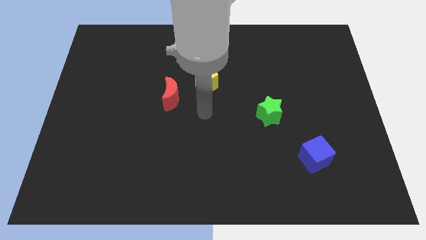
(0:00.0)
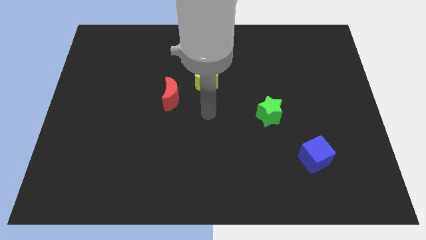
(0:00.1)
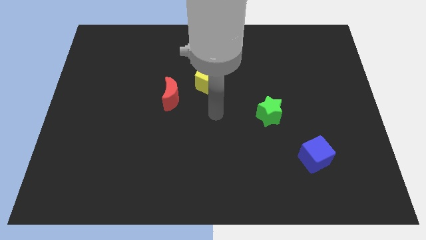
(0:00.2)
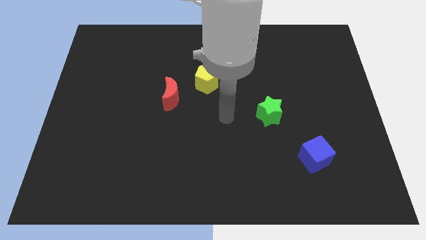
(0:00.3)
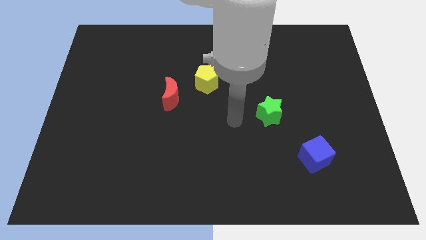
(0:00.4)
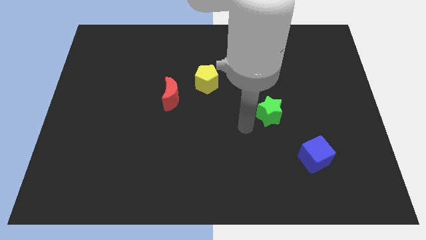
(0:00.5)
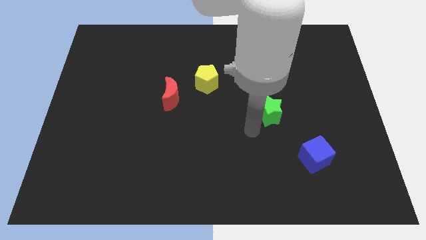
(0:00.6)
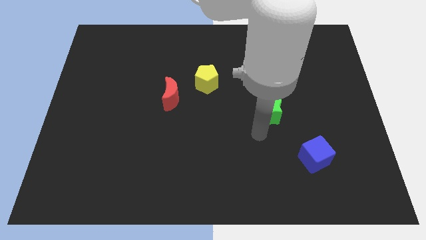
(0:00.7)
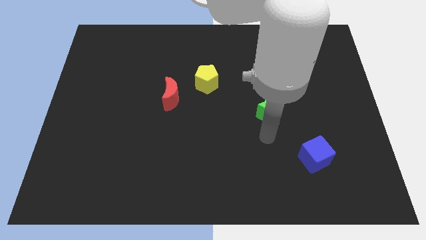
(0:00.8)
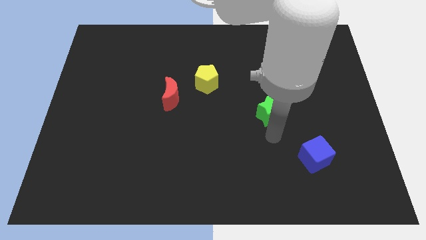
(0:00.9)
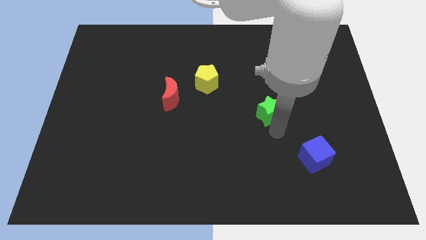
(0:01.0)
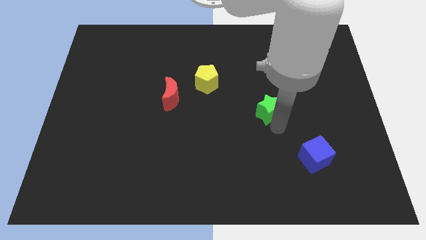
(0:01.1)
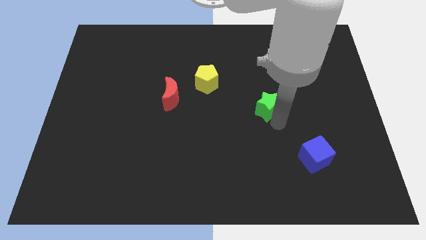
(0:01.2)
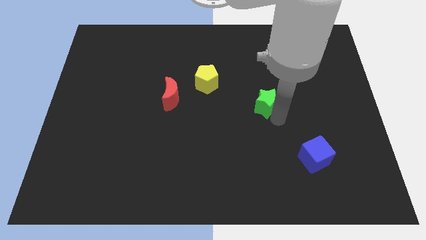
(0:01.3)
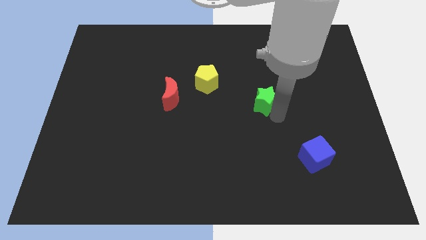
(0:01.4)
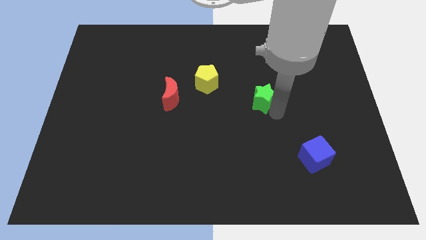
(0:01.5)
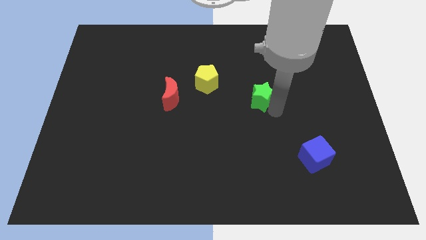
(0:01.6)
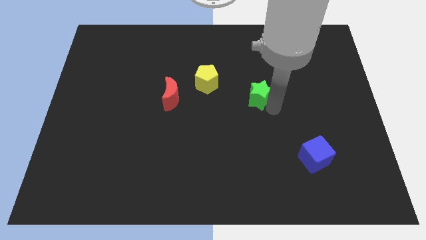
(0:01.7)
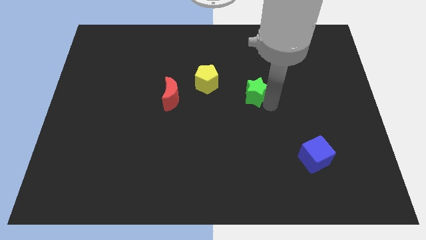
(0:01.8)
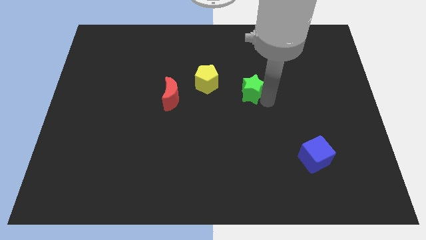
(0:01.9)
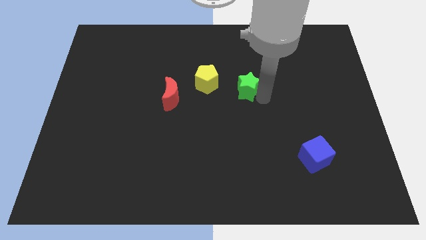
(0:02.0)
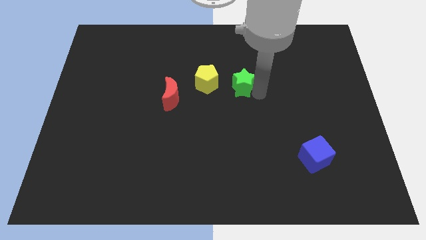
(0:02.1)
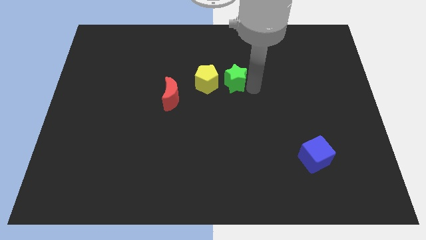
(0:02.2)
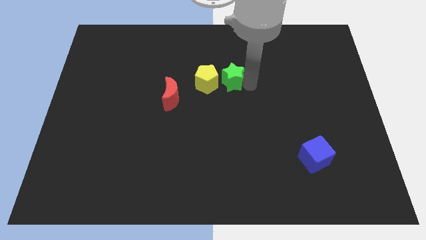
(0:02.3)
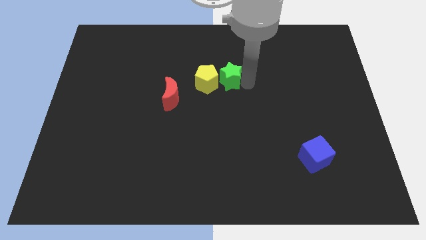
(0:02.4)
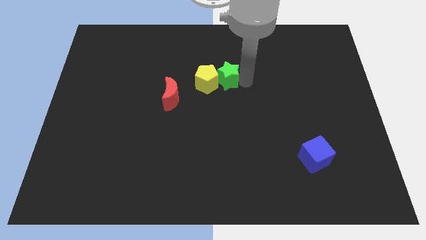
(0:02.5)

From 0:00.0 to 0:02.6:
slide the green block close to the yellow block

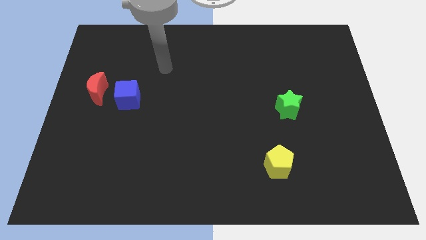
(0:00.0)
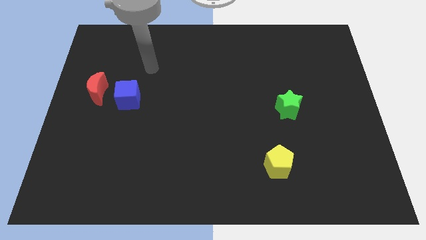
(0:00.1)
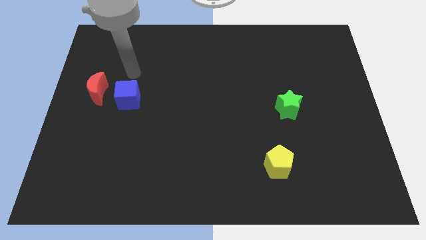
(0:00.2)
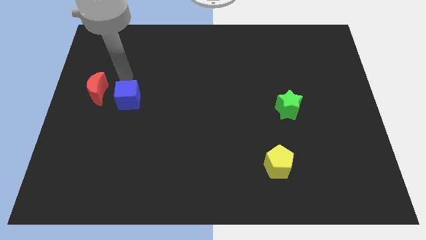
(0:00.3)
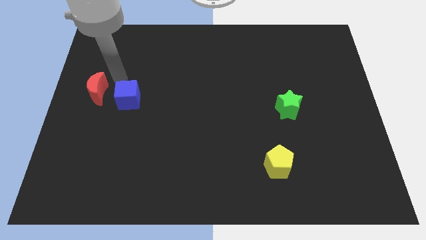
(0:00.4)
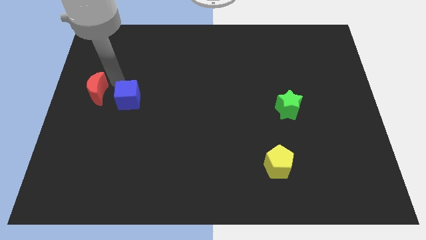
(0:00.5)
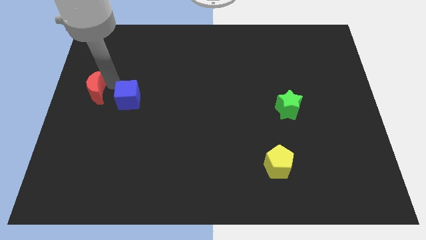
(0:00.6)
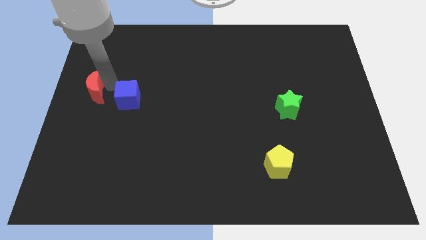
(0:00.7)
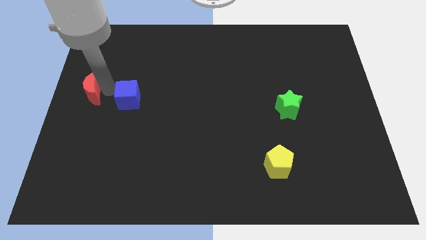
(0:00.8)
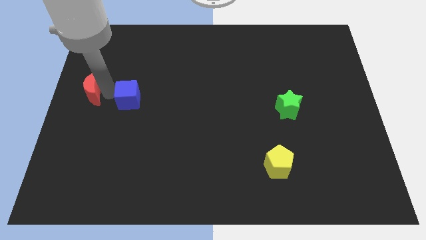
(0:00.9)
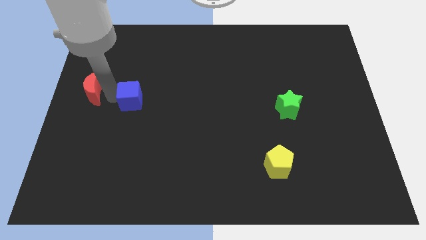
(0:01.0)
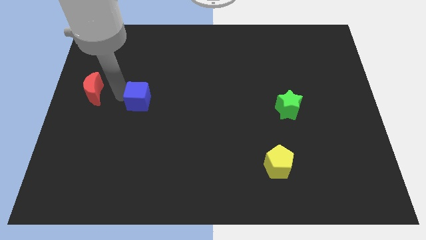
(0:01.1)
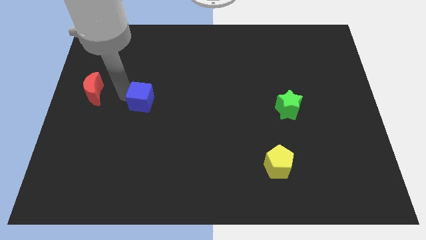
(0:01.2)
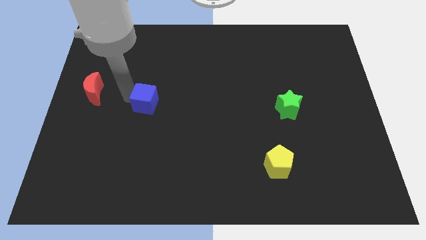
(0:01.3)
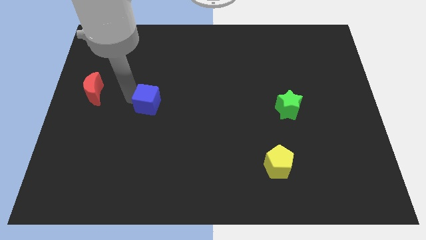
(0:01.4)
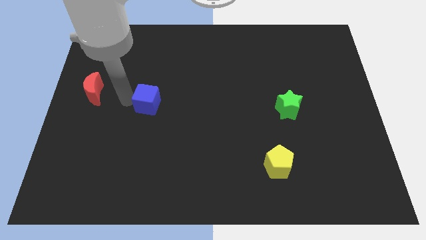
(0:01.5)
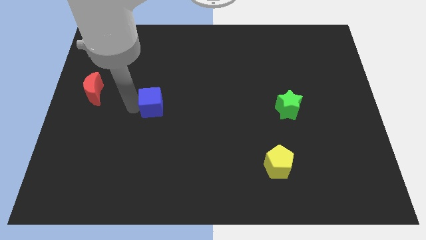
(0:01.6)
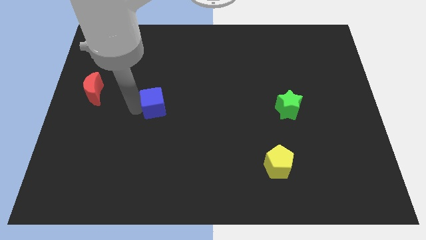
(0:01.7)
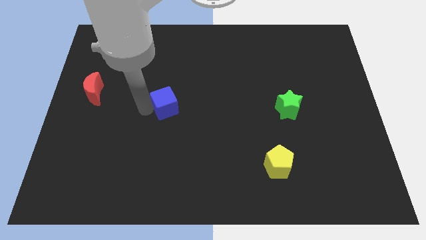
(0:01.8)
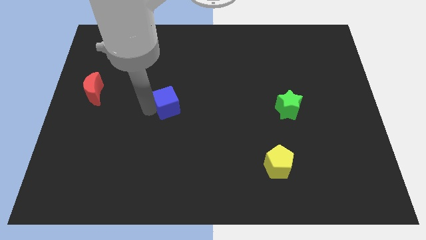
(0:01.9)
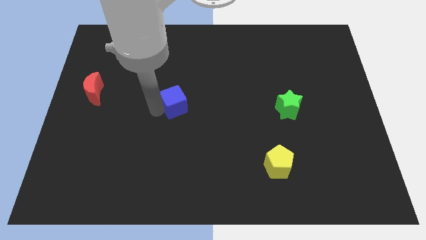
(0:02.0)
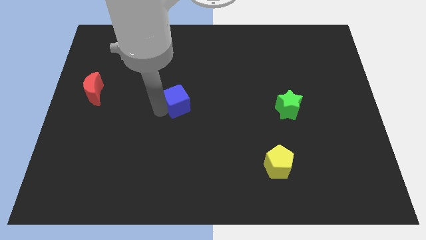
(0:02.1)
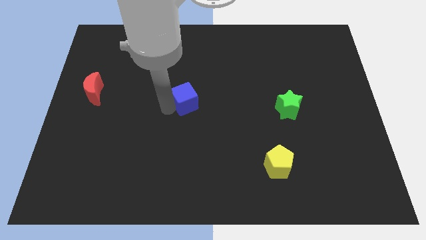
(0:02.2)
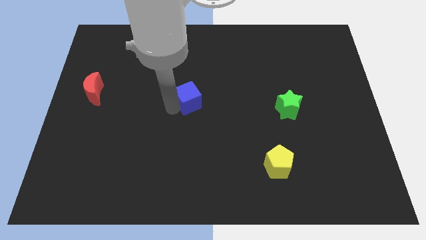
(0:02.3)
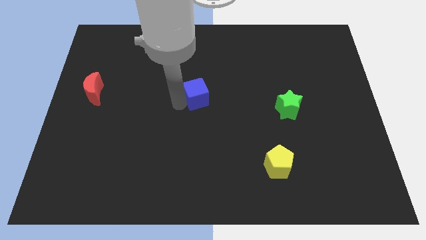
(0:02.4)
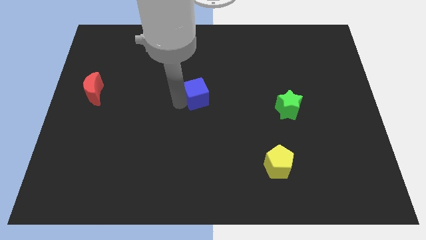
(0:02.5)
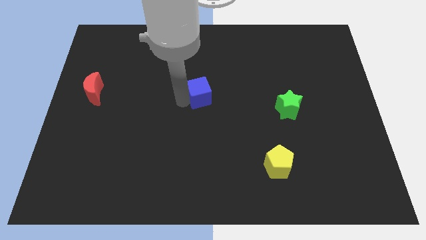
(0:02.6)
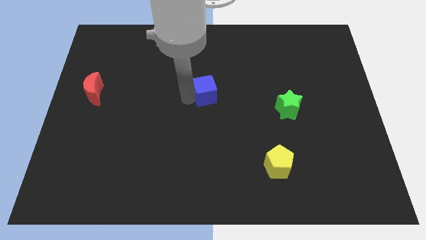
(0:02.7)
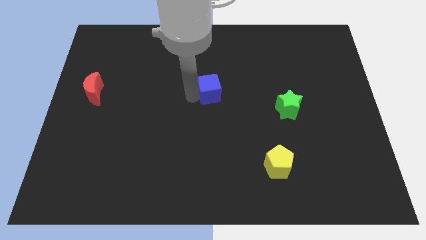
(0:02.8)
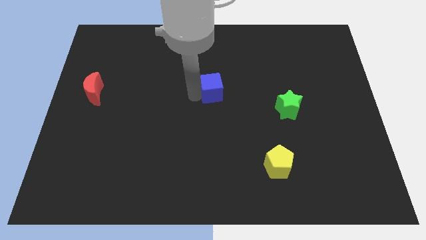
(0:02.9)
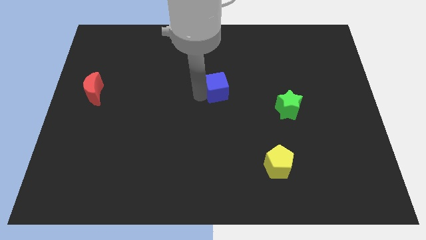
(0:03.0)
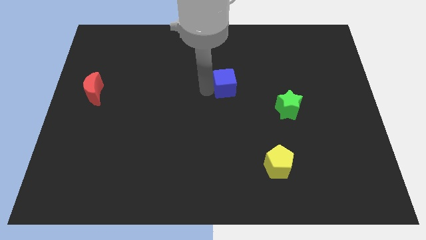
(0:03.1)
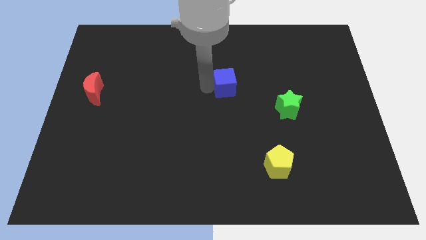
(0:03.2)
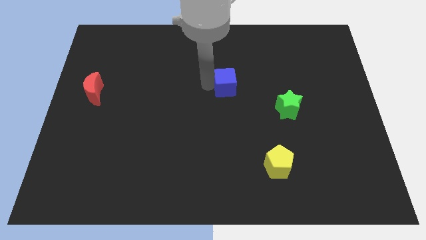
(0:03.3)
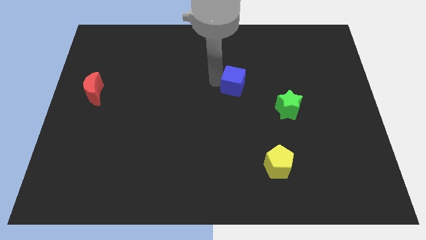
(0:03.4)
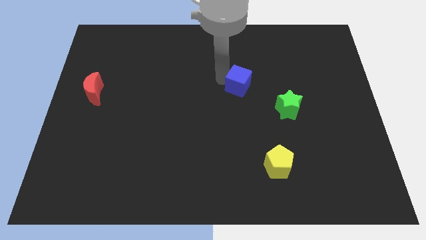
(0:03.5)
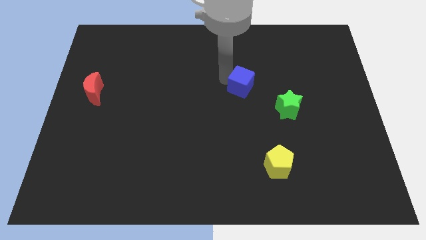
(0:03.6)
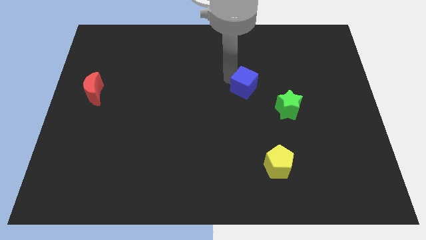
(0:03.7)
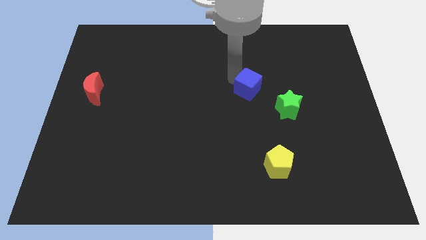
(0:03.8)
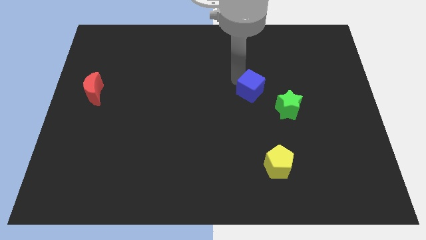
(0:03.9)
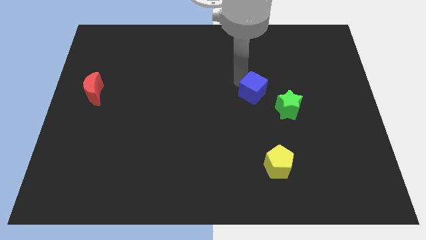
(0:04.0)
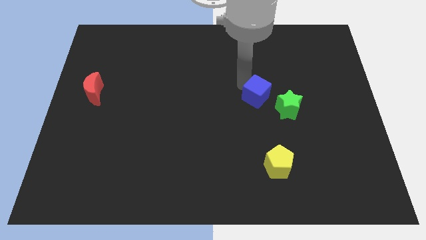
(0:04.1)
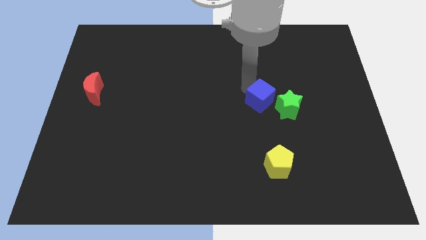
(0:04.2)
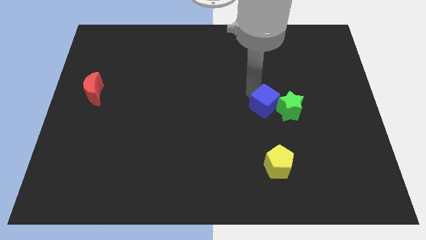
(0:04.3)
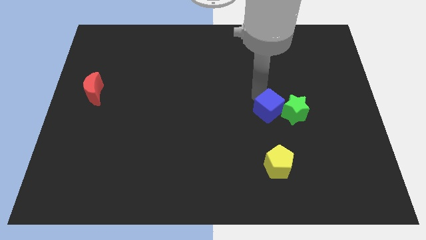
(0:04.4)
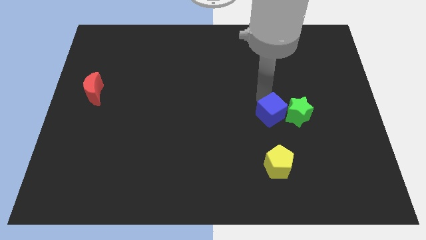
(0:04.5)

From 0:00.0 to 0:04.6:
slide the blue block towards the green block

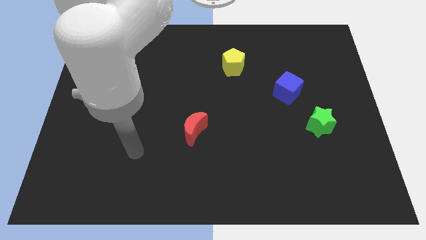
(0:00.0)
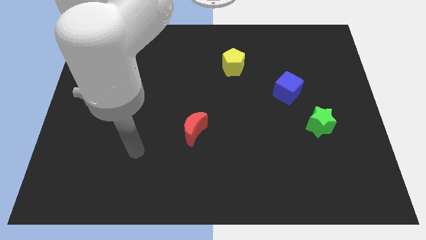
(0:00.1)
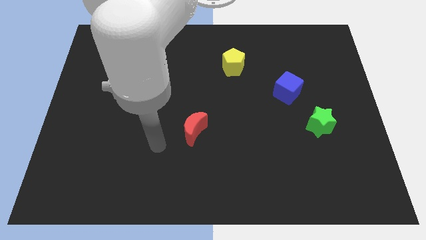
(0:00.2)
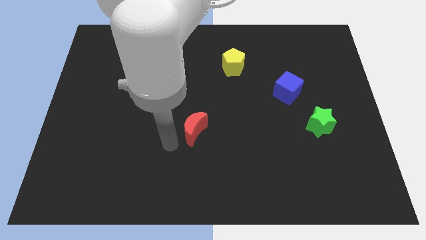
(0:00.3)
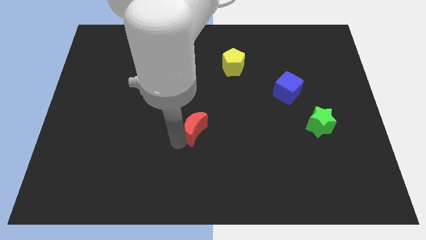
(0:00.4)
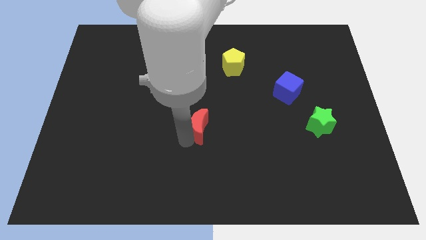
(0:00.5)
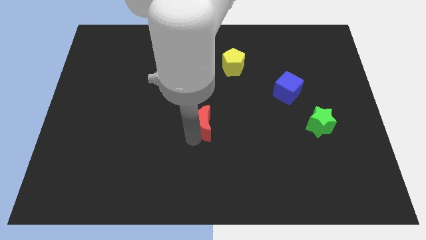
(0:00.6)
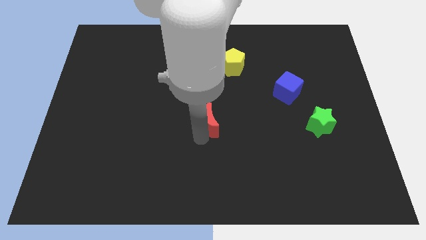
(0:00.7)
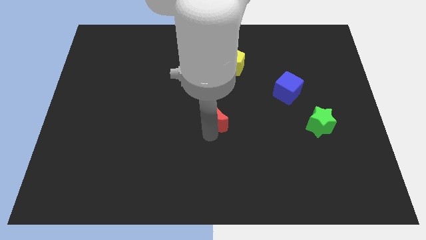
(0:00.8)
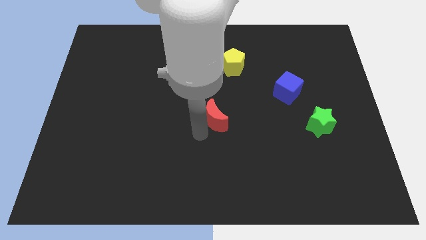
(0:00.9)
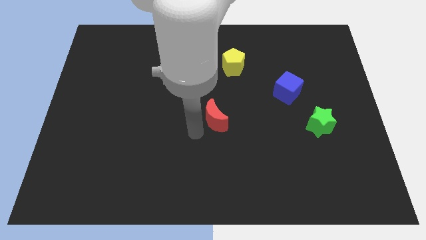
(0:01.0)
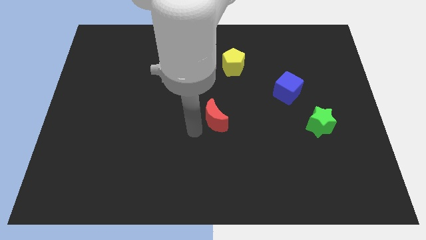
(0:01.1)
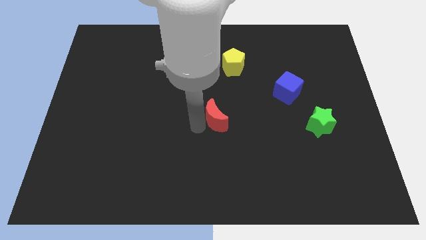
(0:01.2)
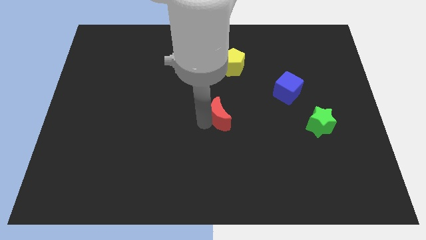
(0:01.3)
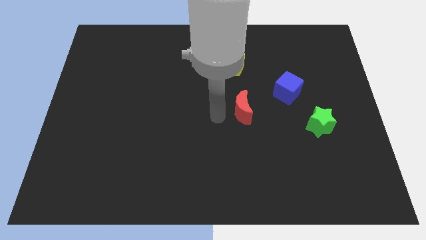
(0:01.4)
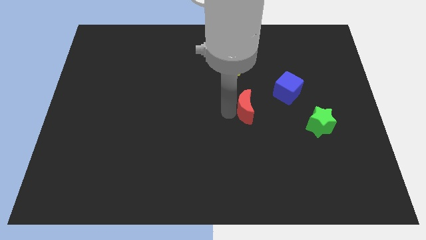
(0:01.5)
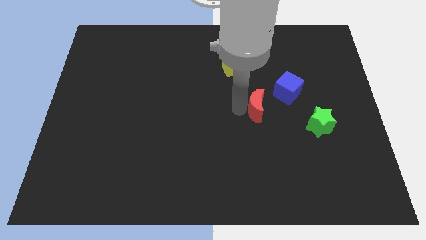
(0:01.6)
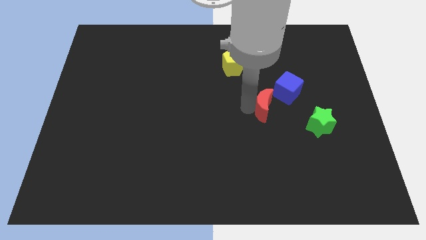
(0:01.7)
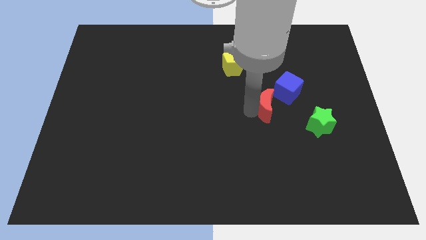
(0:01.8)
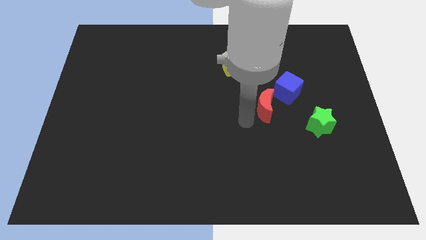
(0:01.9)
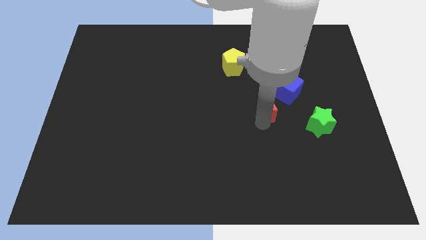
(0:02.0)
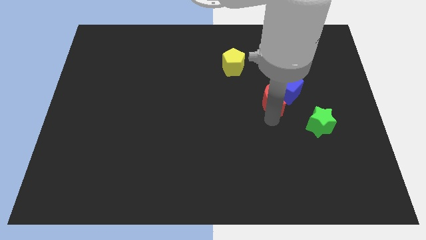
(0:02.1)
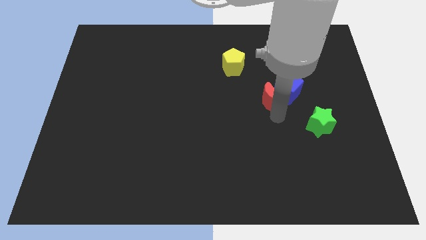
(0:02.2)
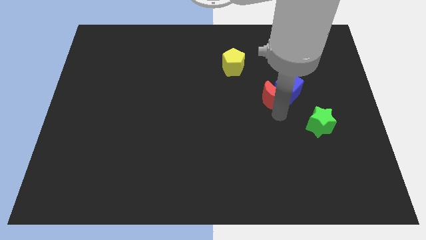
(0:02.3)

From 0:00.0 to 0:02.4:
put the red block towards the blue block
